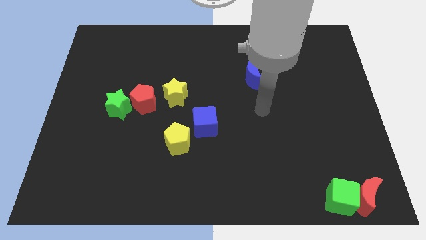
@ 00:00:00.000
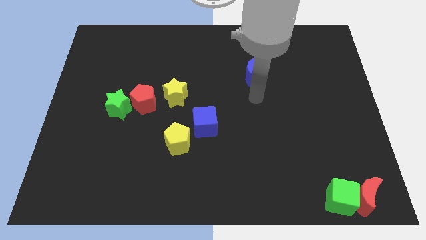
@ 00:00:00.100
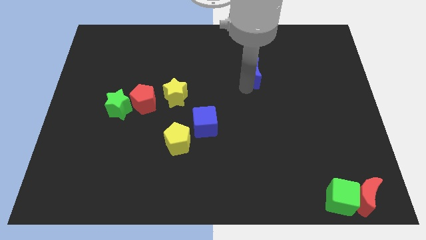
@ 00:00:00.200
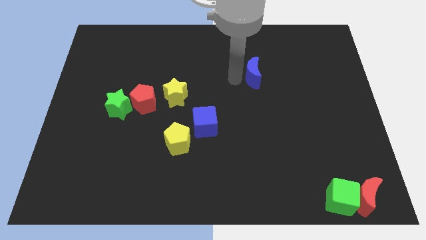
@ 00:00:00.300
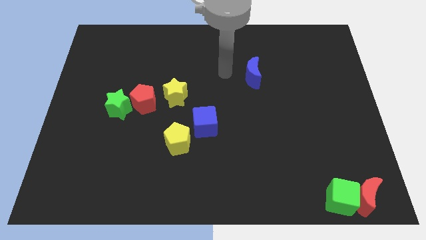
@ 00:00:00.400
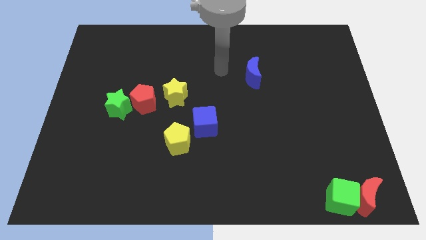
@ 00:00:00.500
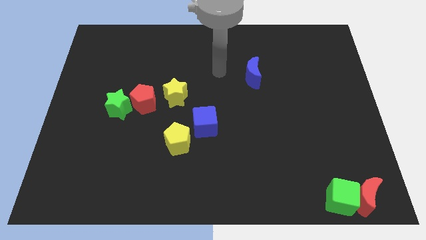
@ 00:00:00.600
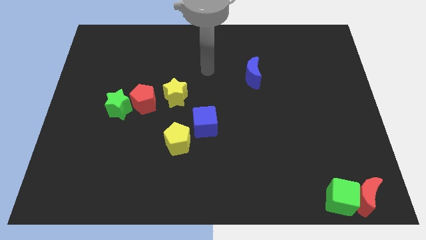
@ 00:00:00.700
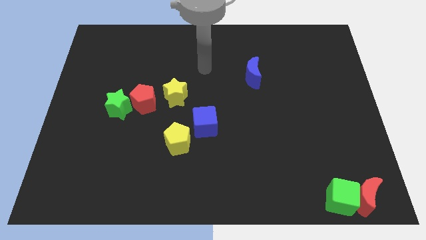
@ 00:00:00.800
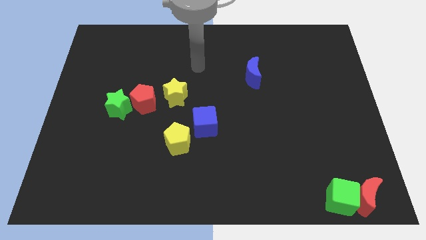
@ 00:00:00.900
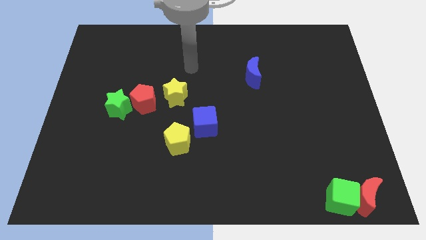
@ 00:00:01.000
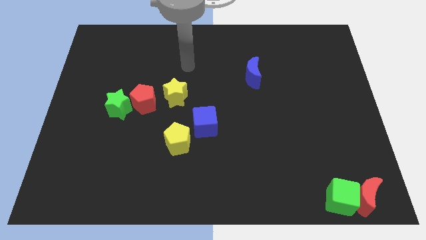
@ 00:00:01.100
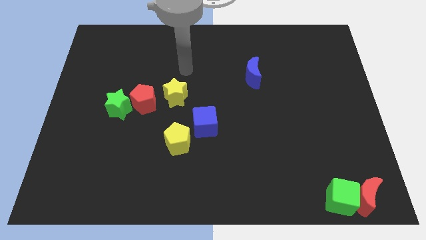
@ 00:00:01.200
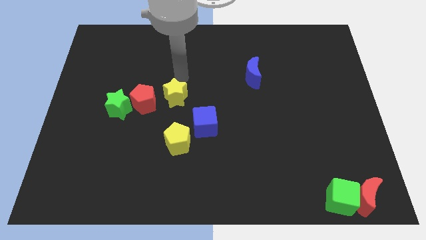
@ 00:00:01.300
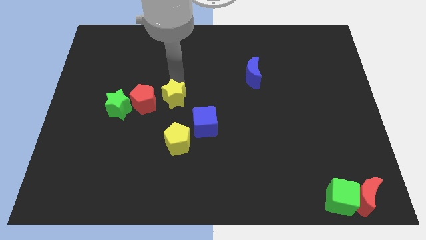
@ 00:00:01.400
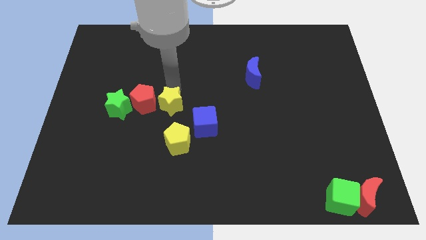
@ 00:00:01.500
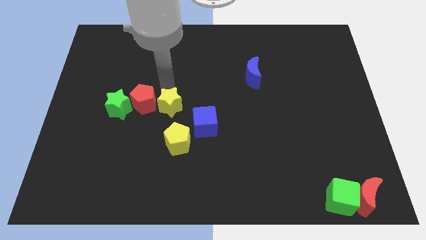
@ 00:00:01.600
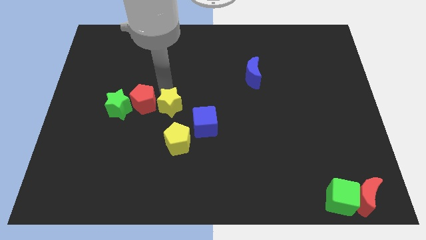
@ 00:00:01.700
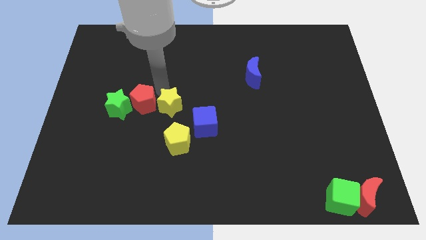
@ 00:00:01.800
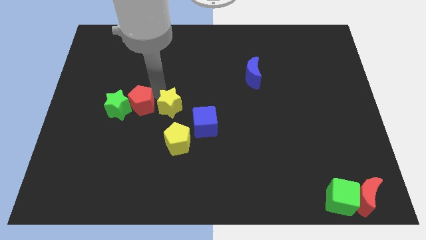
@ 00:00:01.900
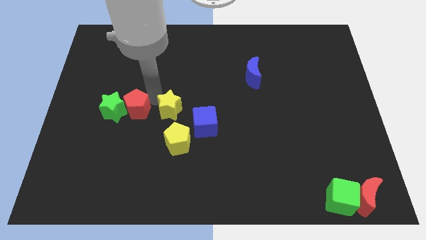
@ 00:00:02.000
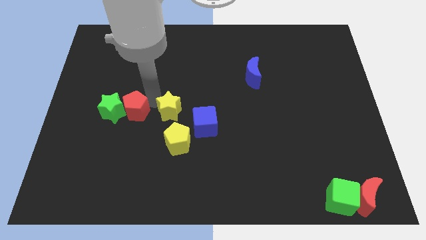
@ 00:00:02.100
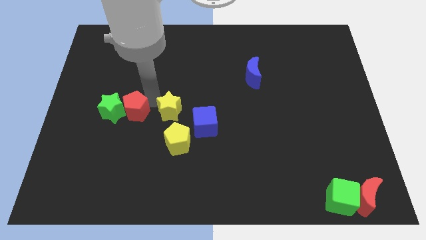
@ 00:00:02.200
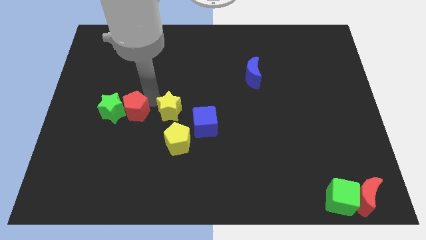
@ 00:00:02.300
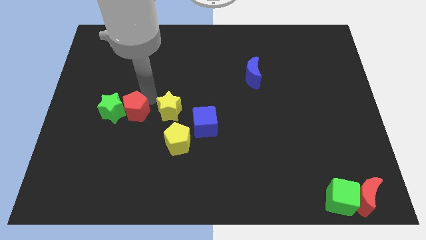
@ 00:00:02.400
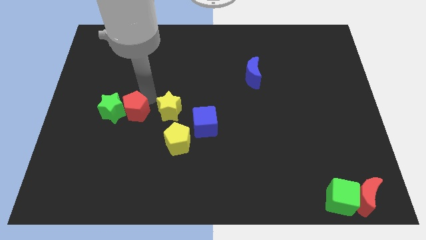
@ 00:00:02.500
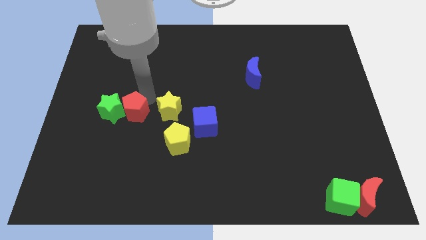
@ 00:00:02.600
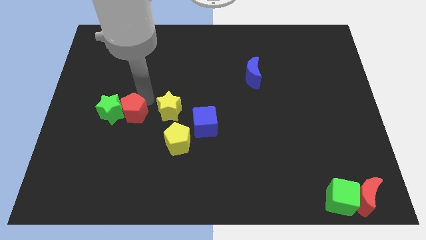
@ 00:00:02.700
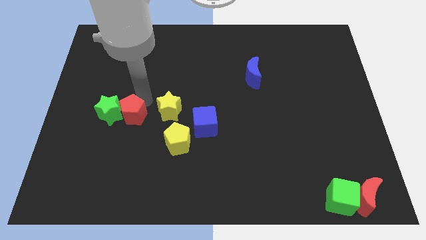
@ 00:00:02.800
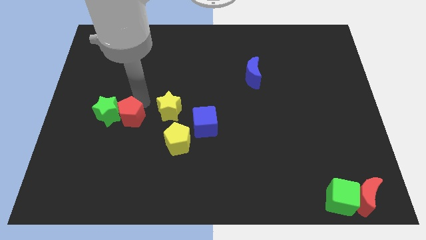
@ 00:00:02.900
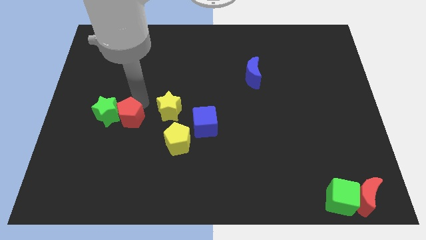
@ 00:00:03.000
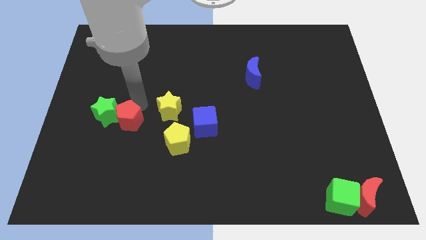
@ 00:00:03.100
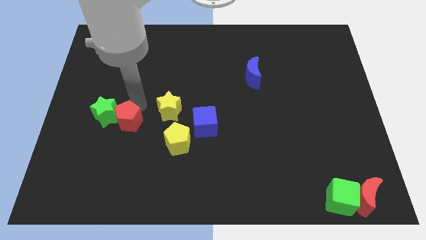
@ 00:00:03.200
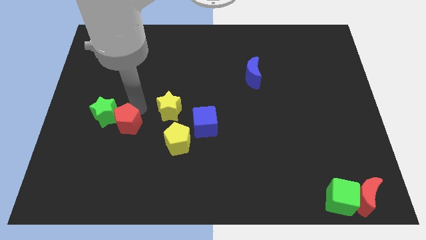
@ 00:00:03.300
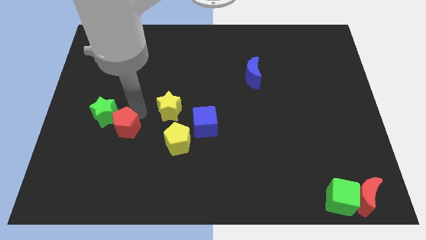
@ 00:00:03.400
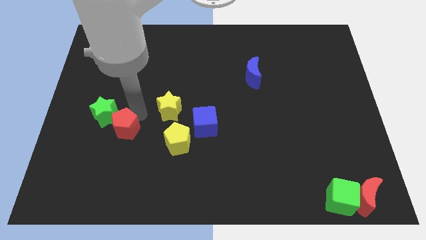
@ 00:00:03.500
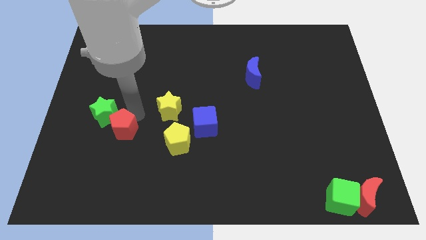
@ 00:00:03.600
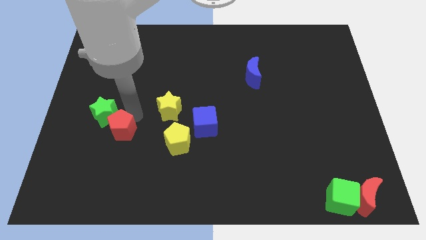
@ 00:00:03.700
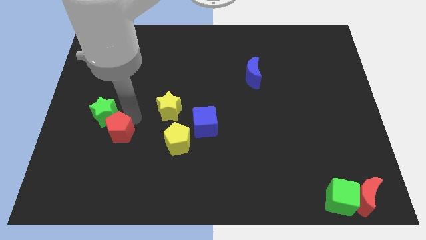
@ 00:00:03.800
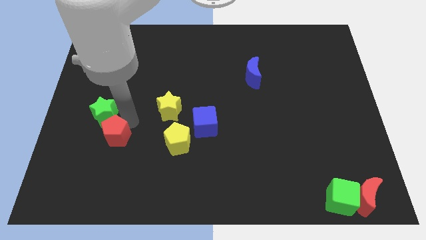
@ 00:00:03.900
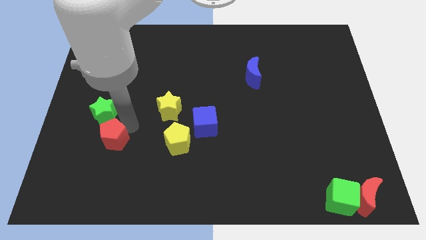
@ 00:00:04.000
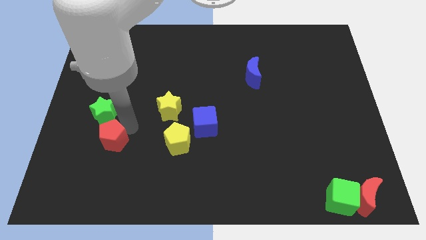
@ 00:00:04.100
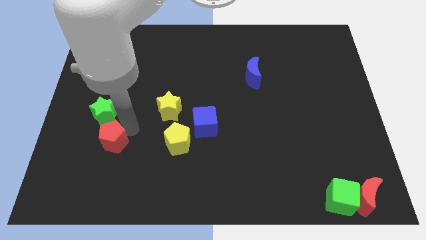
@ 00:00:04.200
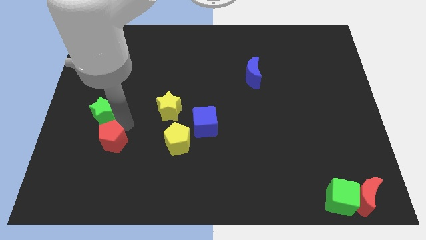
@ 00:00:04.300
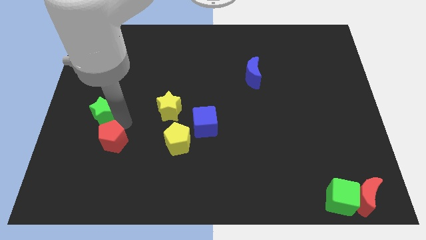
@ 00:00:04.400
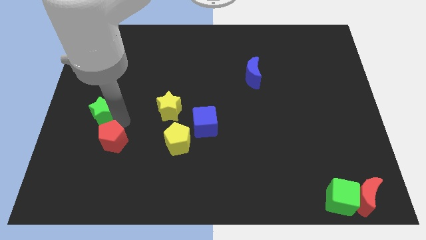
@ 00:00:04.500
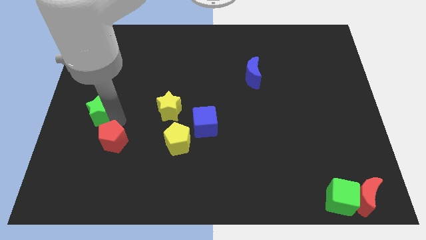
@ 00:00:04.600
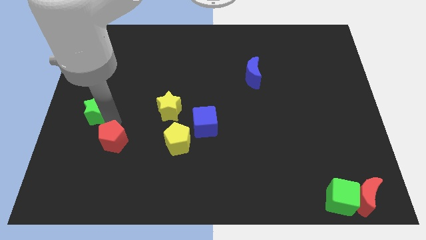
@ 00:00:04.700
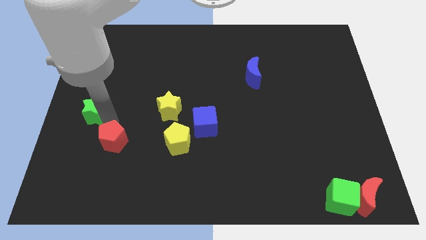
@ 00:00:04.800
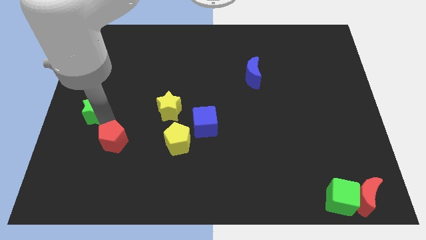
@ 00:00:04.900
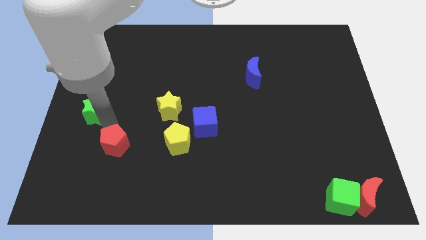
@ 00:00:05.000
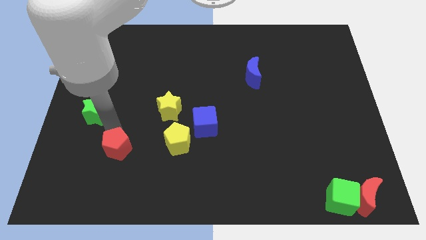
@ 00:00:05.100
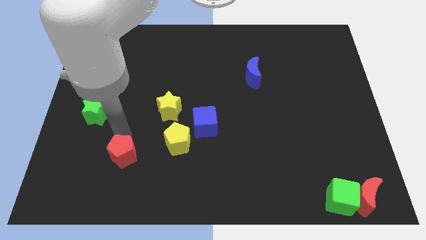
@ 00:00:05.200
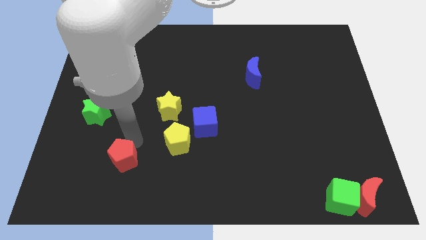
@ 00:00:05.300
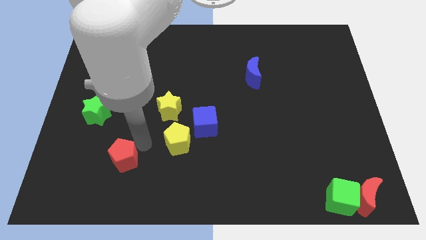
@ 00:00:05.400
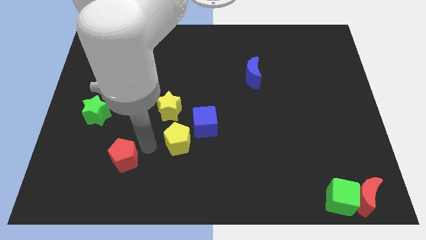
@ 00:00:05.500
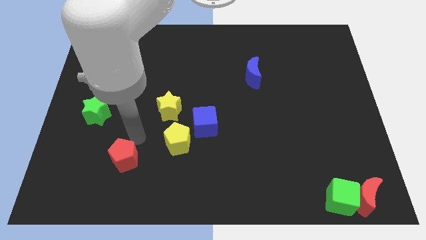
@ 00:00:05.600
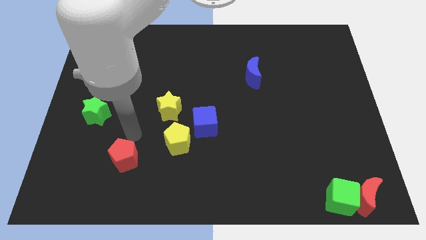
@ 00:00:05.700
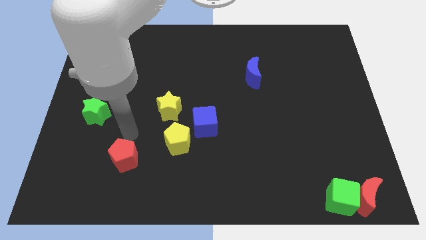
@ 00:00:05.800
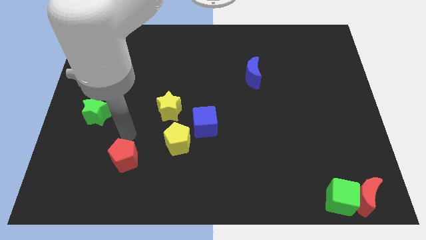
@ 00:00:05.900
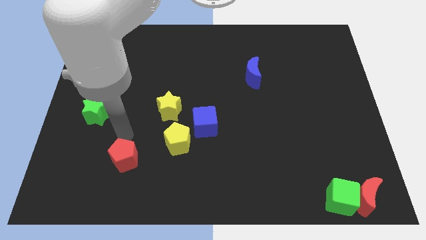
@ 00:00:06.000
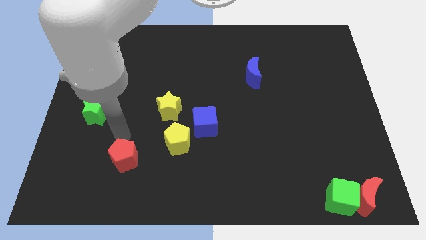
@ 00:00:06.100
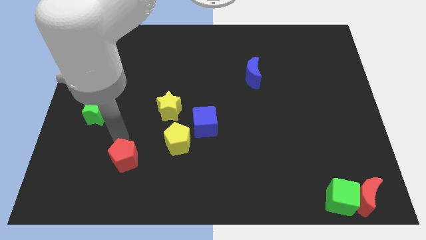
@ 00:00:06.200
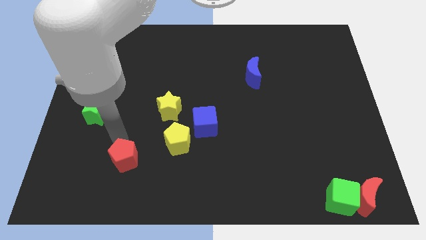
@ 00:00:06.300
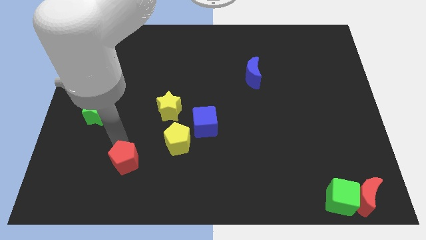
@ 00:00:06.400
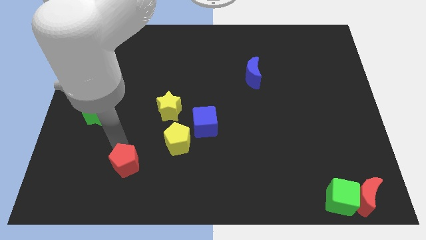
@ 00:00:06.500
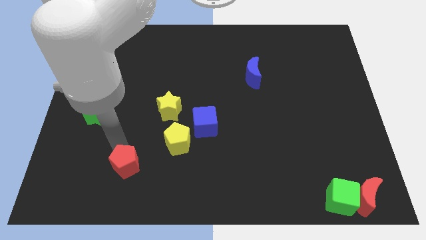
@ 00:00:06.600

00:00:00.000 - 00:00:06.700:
move red pentagon slightly down

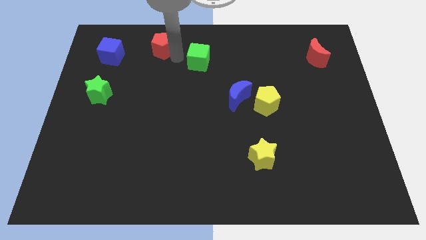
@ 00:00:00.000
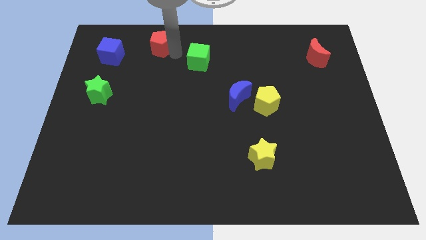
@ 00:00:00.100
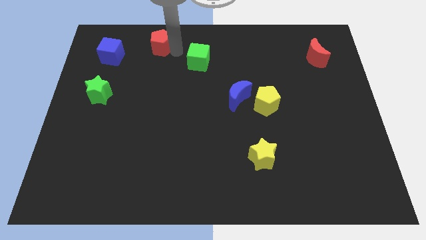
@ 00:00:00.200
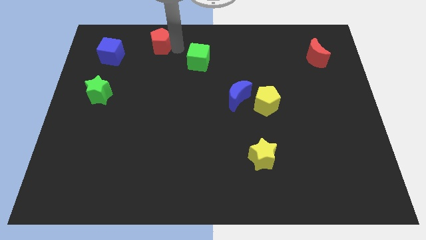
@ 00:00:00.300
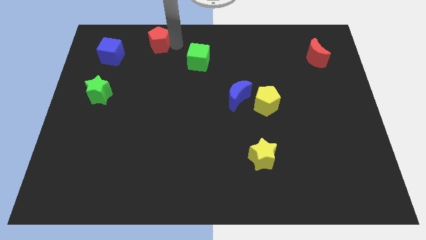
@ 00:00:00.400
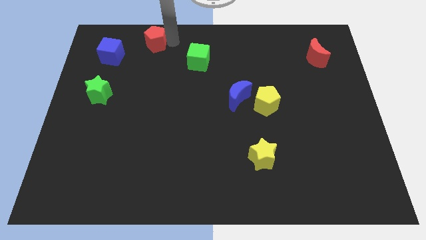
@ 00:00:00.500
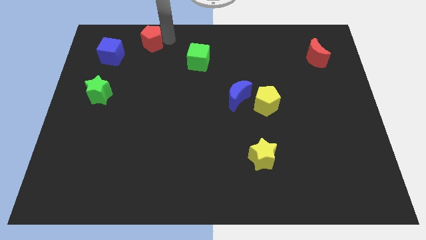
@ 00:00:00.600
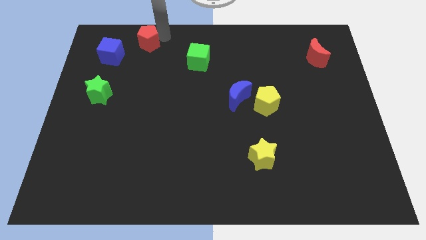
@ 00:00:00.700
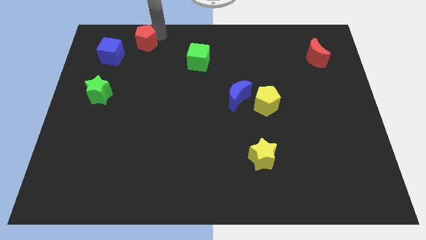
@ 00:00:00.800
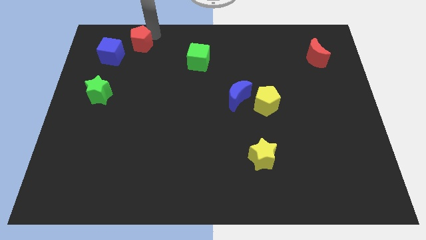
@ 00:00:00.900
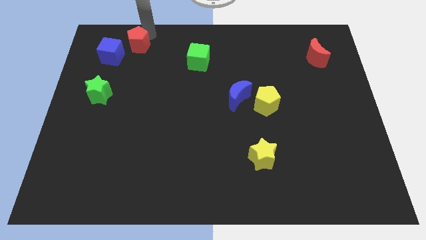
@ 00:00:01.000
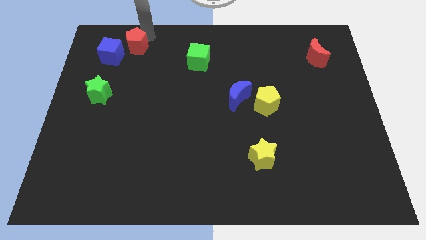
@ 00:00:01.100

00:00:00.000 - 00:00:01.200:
move the red pentagon towards the blue cube

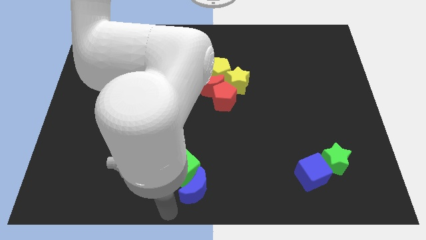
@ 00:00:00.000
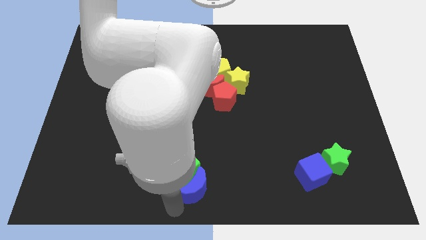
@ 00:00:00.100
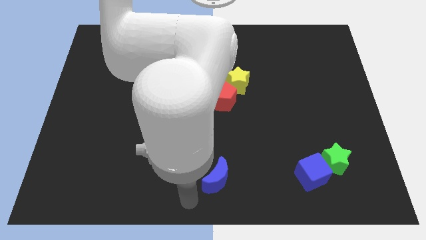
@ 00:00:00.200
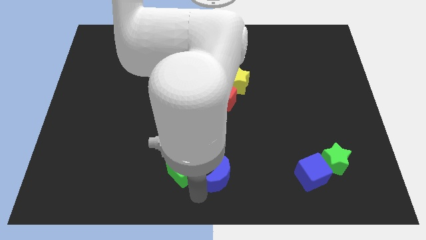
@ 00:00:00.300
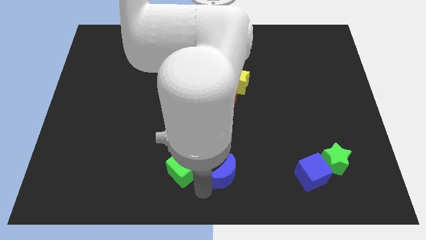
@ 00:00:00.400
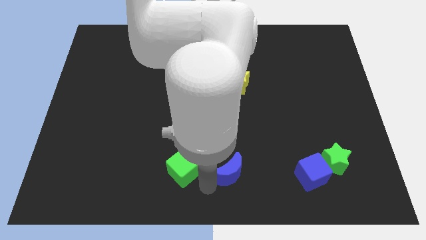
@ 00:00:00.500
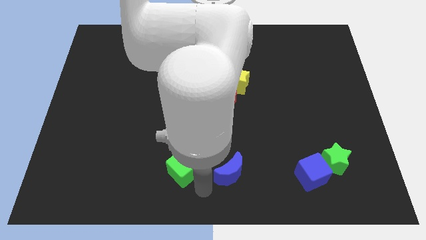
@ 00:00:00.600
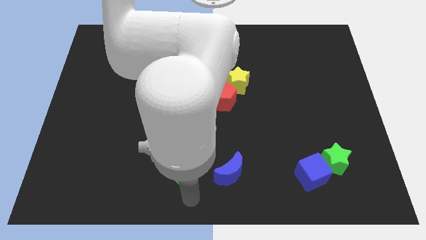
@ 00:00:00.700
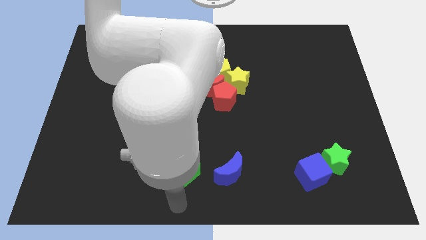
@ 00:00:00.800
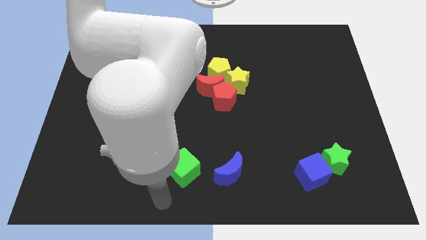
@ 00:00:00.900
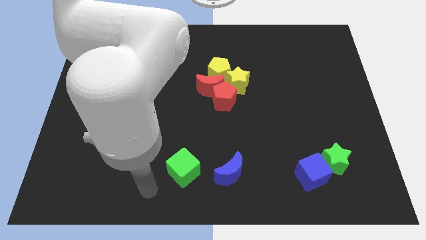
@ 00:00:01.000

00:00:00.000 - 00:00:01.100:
push blue crescent apart from green cube
